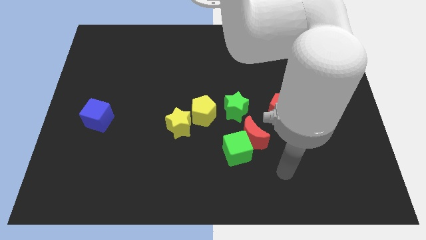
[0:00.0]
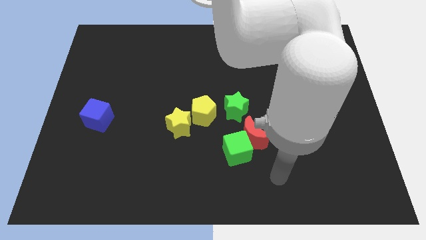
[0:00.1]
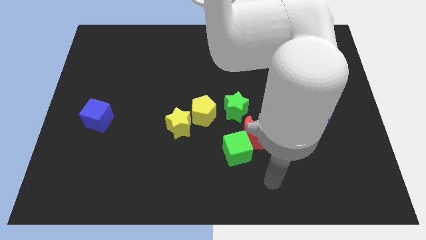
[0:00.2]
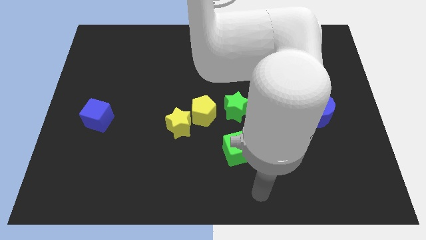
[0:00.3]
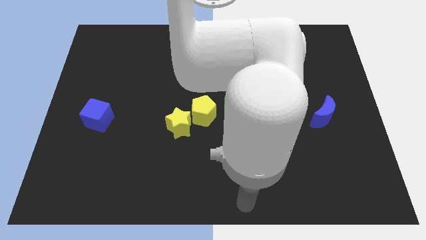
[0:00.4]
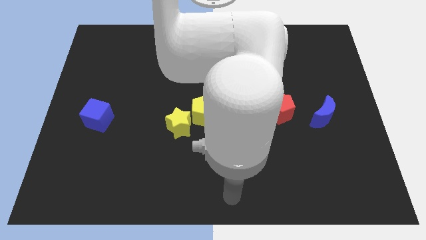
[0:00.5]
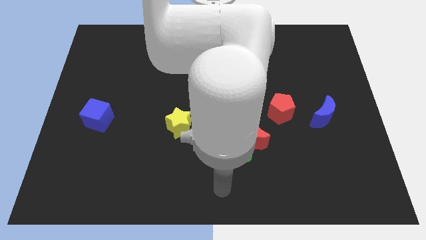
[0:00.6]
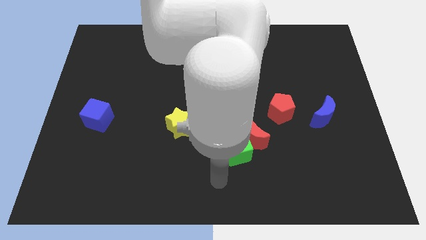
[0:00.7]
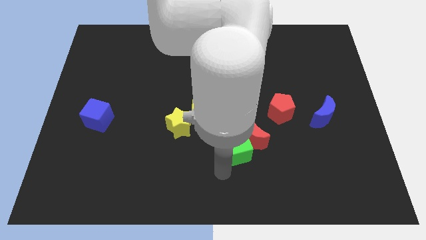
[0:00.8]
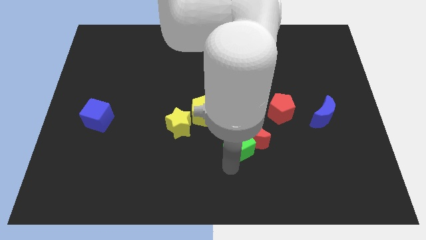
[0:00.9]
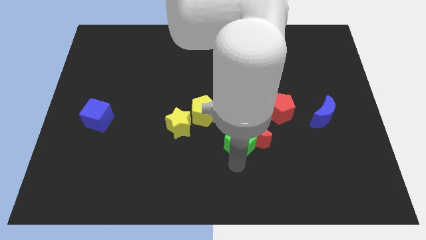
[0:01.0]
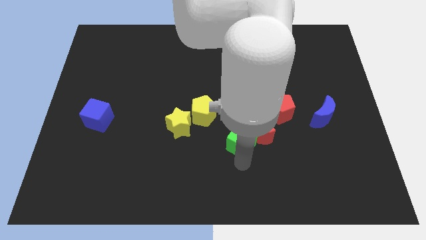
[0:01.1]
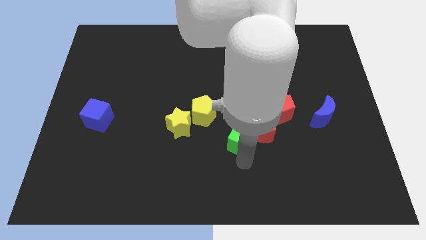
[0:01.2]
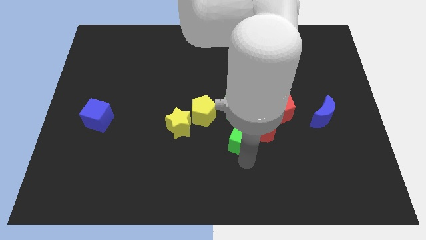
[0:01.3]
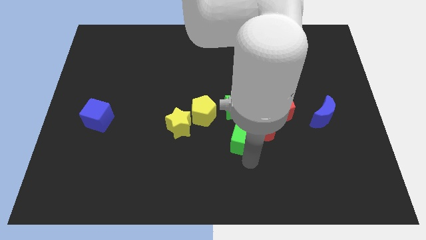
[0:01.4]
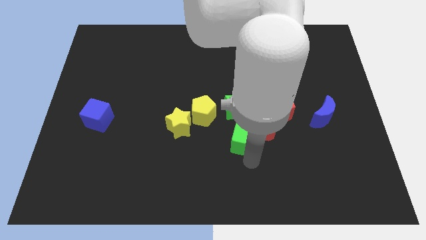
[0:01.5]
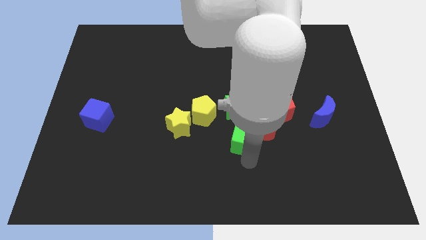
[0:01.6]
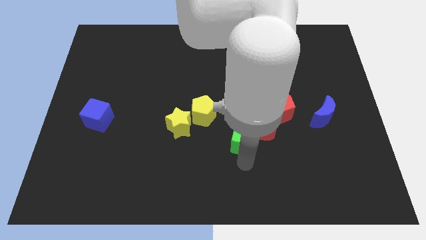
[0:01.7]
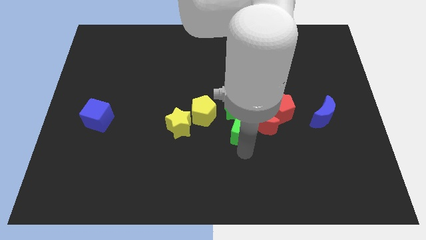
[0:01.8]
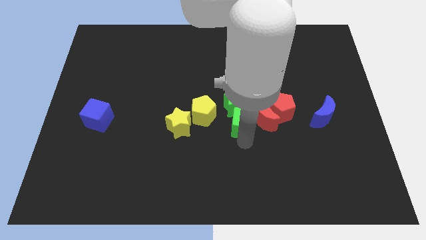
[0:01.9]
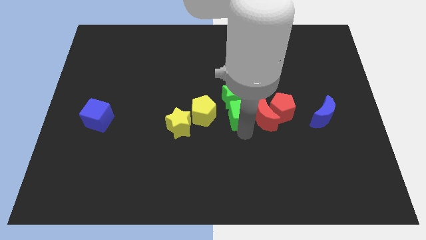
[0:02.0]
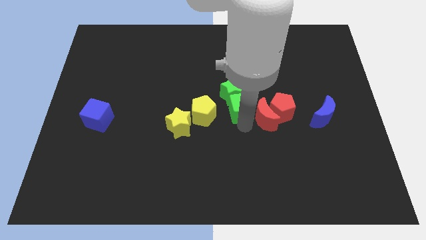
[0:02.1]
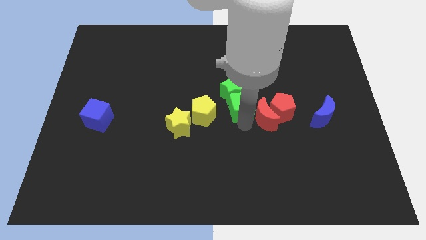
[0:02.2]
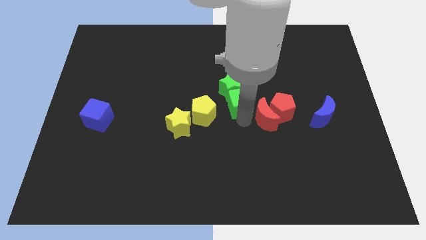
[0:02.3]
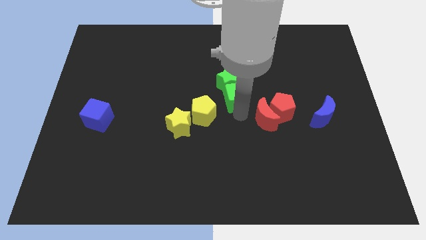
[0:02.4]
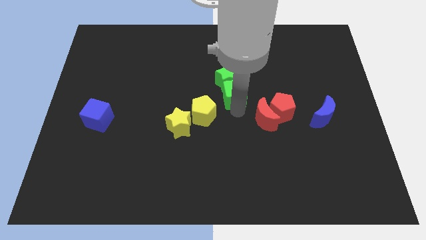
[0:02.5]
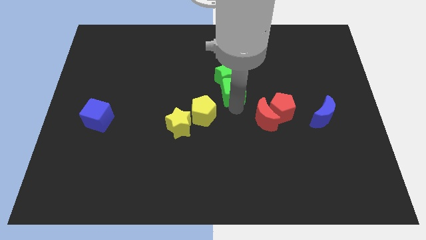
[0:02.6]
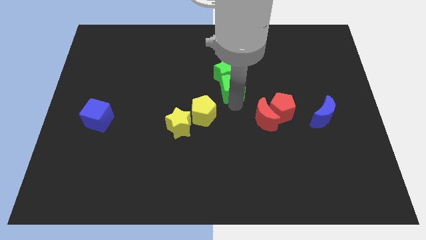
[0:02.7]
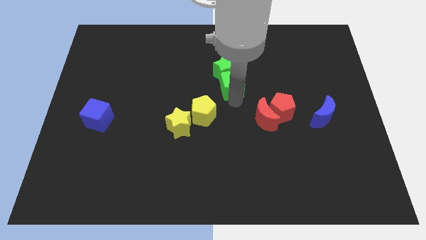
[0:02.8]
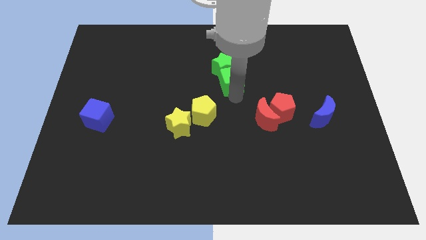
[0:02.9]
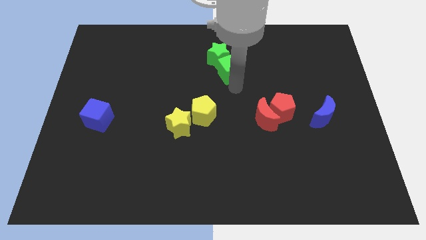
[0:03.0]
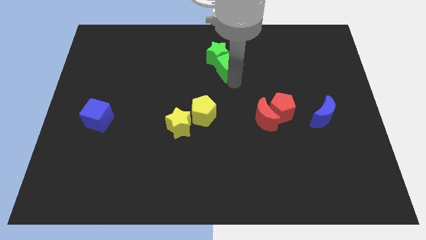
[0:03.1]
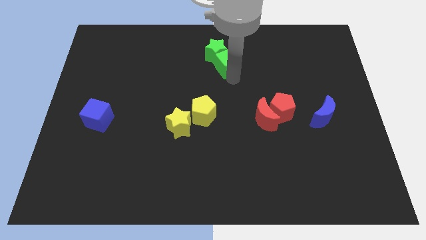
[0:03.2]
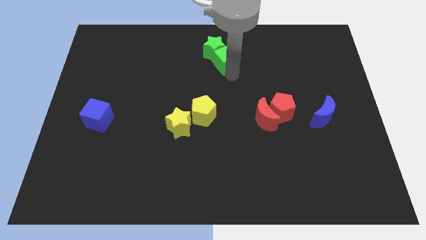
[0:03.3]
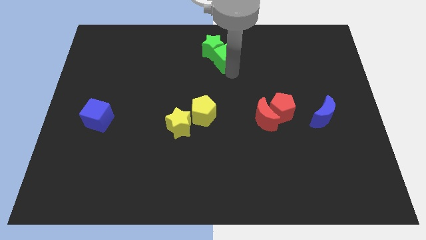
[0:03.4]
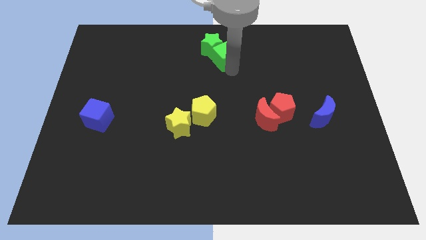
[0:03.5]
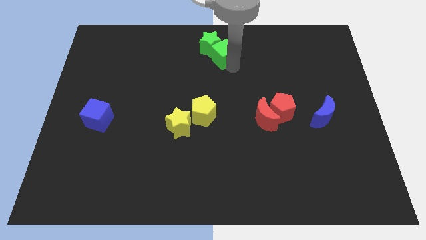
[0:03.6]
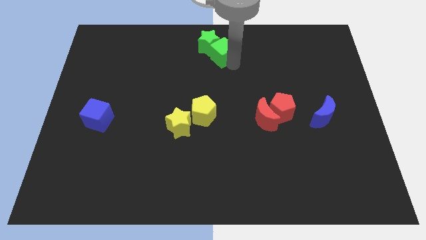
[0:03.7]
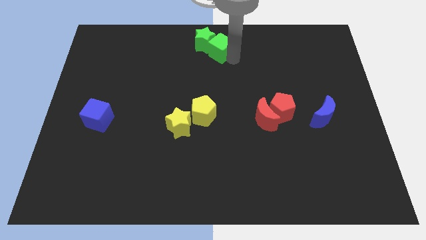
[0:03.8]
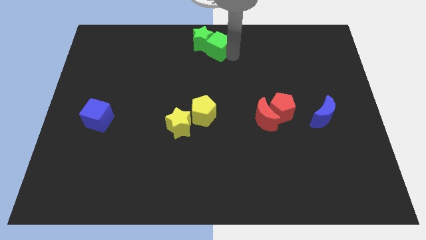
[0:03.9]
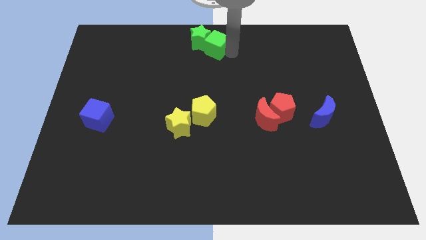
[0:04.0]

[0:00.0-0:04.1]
move green blocks to the top center

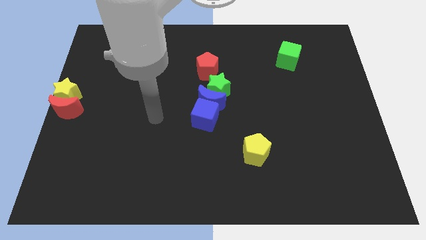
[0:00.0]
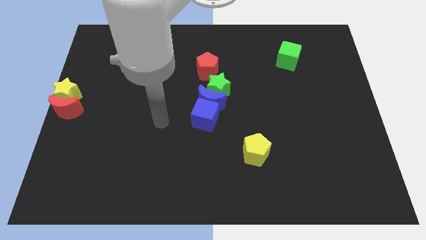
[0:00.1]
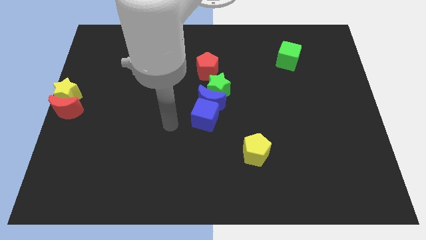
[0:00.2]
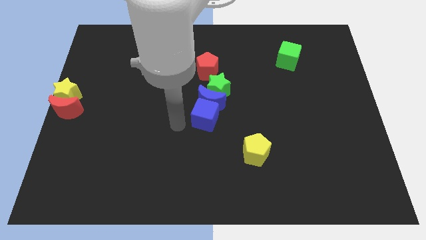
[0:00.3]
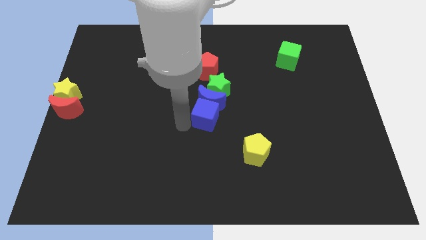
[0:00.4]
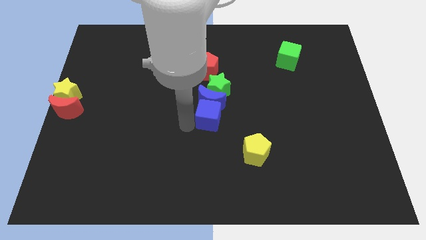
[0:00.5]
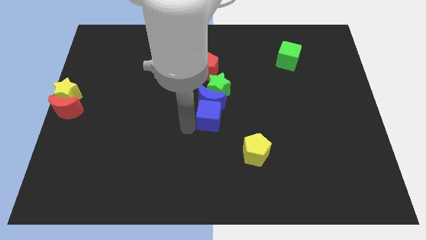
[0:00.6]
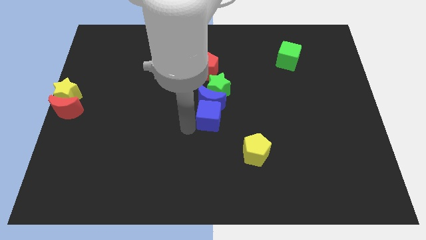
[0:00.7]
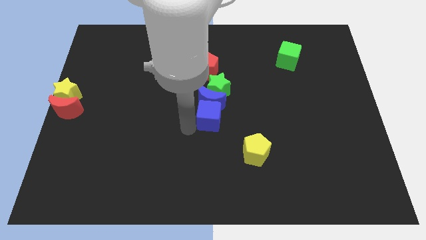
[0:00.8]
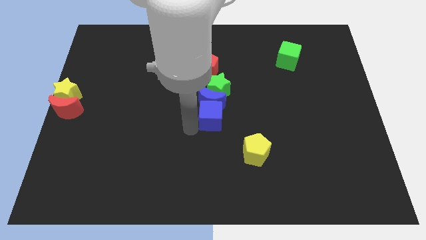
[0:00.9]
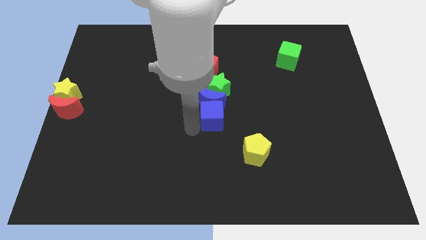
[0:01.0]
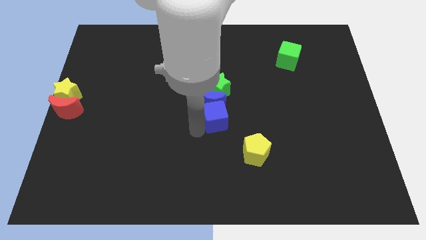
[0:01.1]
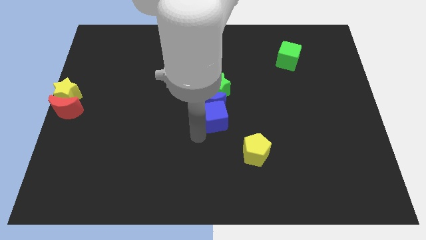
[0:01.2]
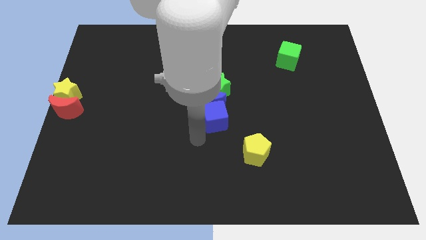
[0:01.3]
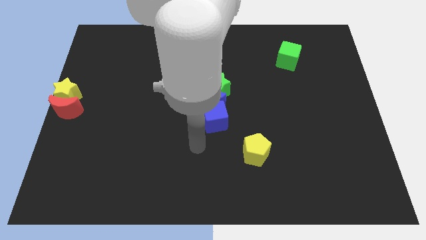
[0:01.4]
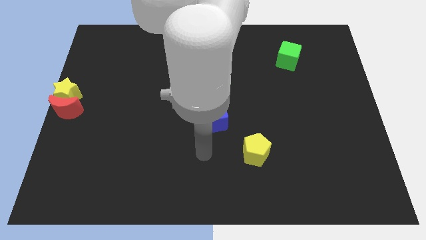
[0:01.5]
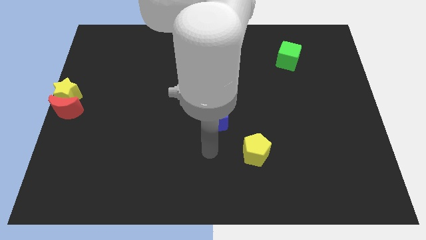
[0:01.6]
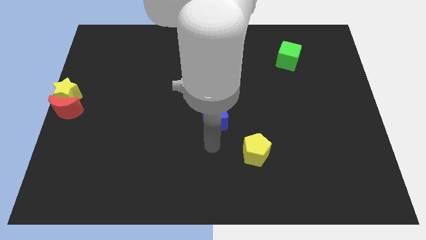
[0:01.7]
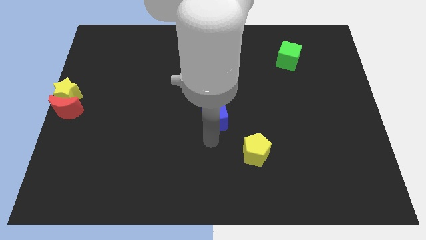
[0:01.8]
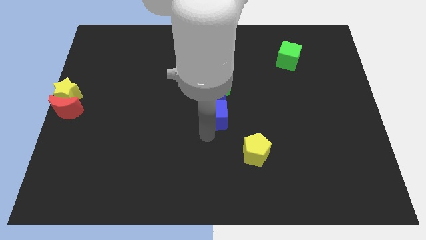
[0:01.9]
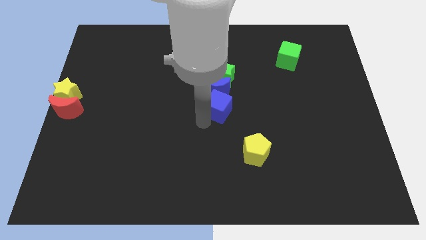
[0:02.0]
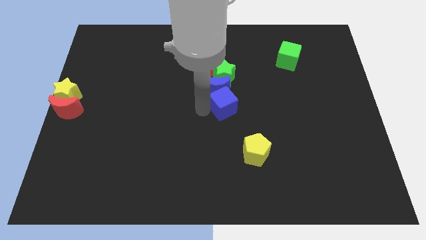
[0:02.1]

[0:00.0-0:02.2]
push blue blocks along with green star into red pentagon

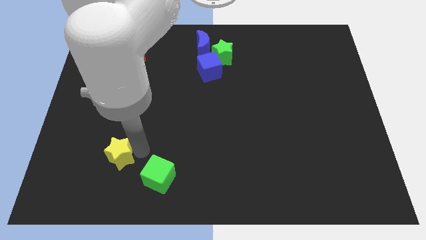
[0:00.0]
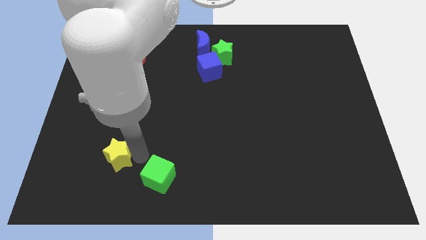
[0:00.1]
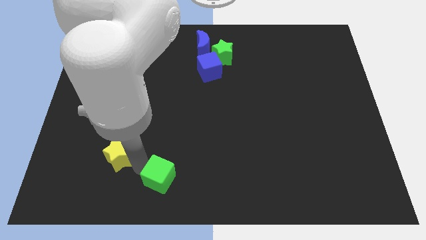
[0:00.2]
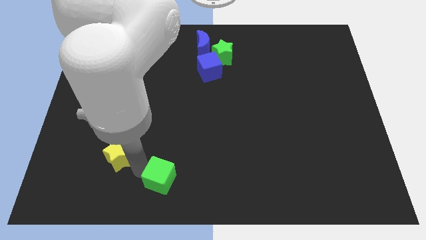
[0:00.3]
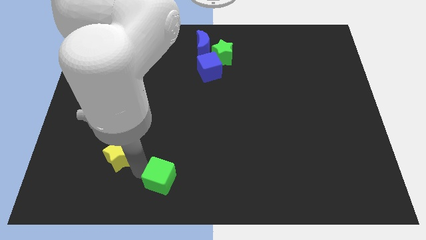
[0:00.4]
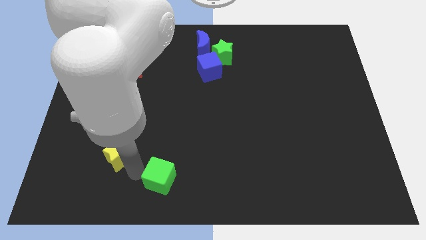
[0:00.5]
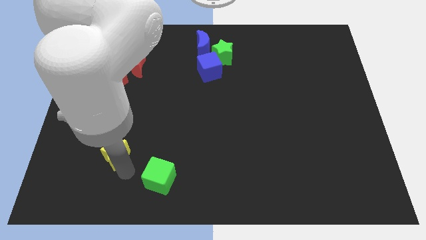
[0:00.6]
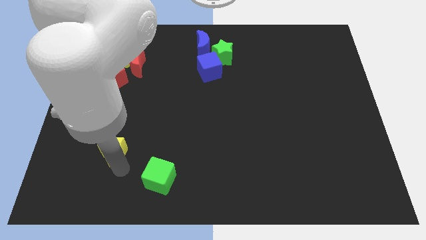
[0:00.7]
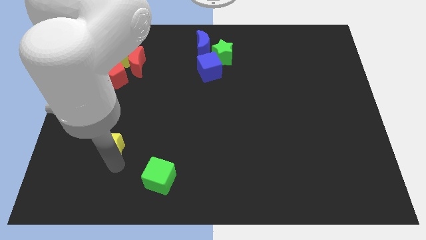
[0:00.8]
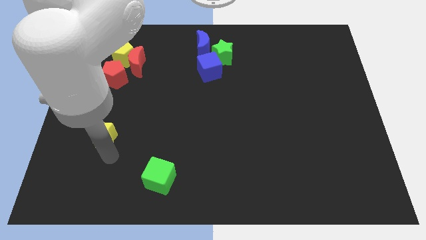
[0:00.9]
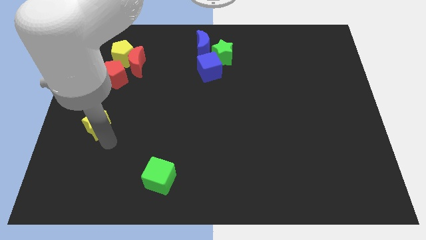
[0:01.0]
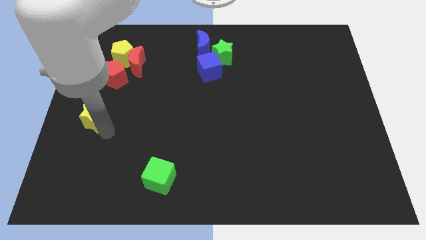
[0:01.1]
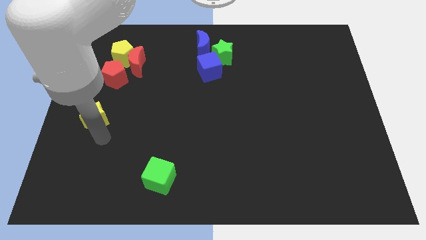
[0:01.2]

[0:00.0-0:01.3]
move the yellow star up slightly

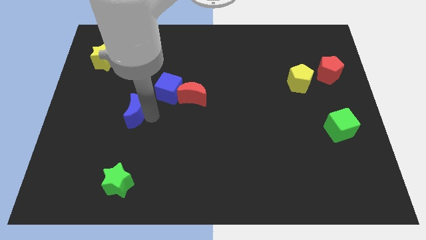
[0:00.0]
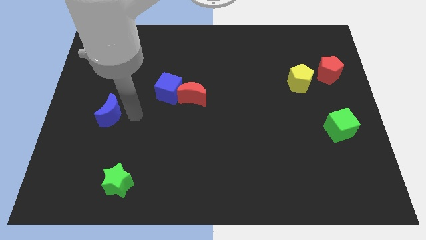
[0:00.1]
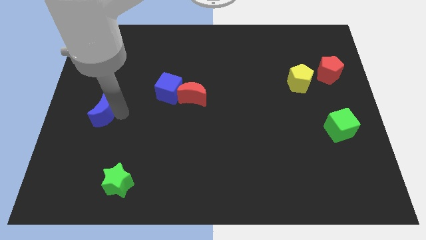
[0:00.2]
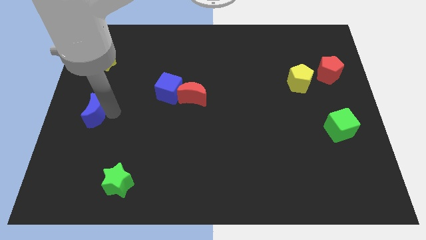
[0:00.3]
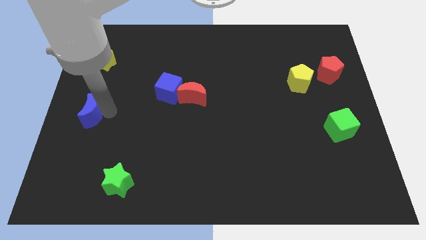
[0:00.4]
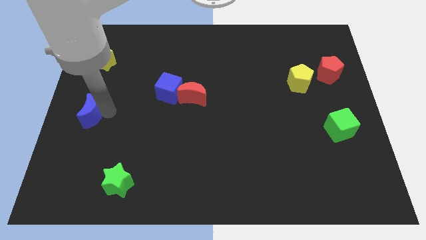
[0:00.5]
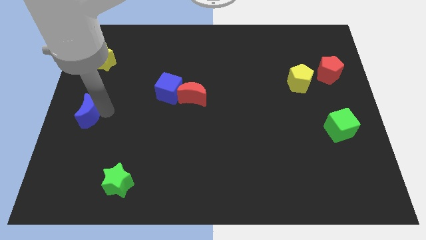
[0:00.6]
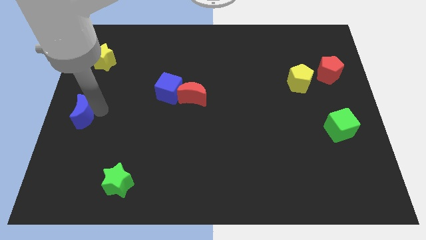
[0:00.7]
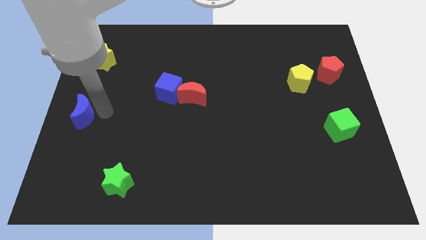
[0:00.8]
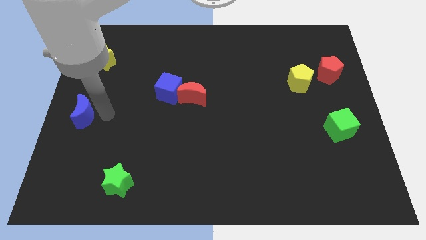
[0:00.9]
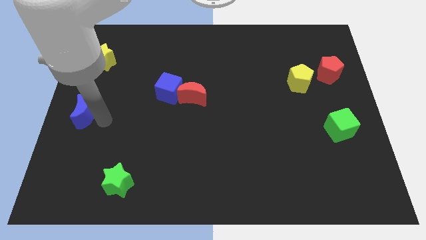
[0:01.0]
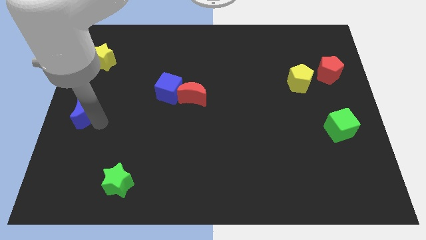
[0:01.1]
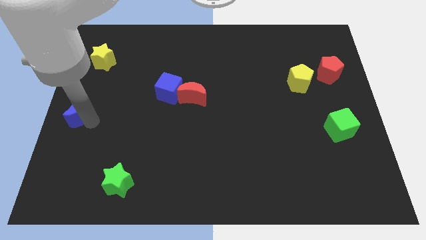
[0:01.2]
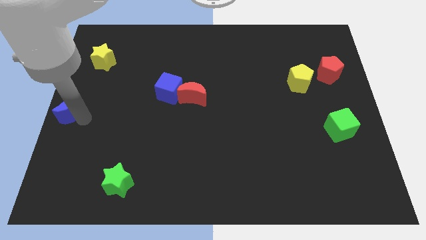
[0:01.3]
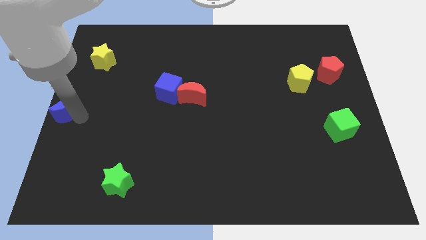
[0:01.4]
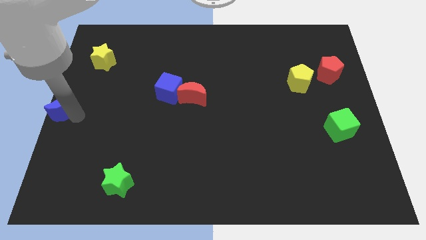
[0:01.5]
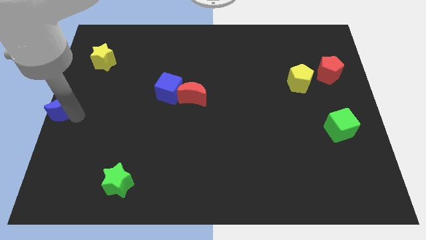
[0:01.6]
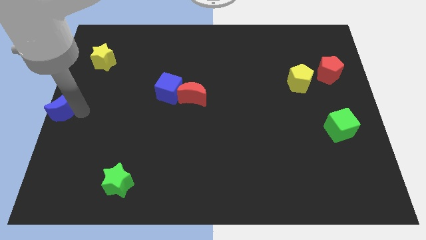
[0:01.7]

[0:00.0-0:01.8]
move blue moon to the left center of the board
